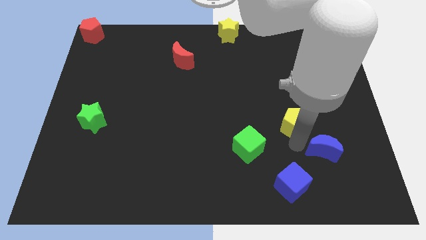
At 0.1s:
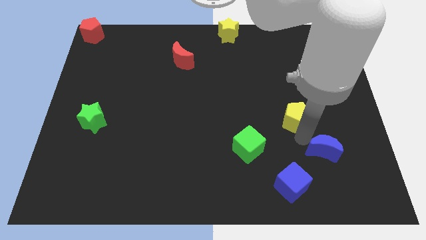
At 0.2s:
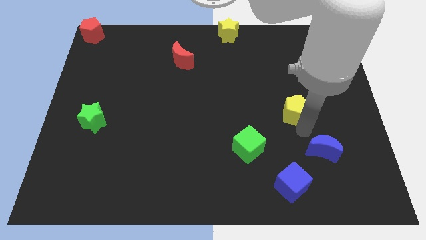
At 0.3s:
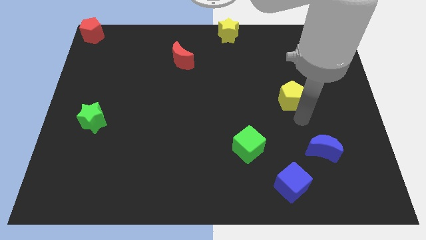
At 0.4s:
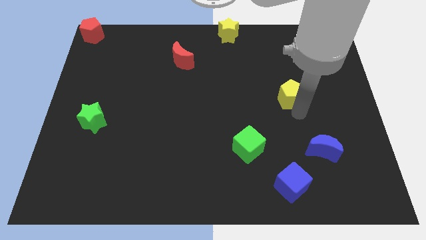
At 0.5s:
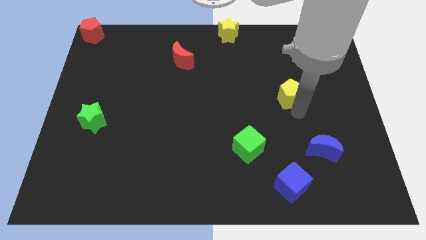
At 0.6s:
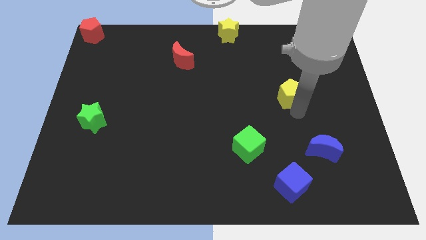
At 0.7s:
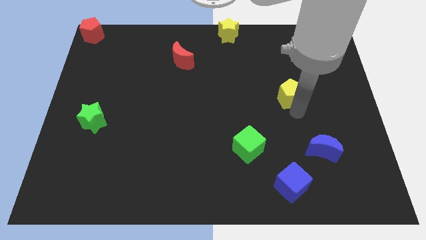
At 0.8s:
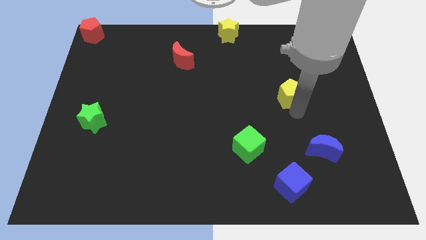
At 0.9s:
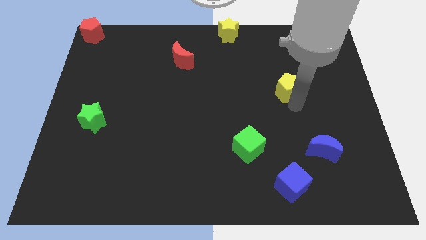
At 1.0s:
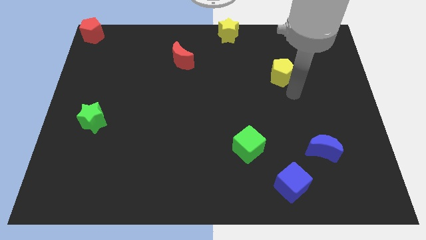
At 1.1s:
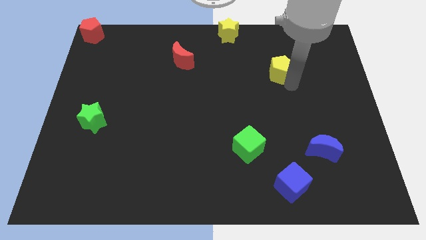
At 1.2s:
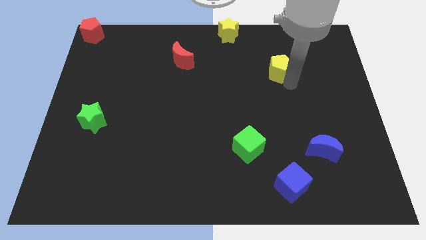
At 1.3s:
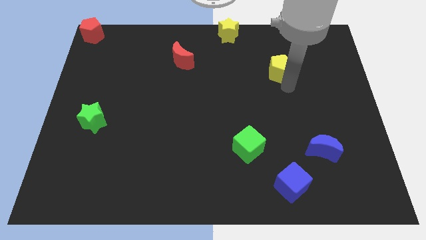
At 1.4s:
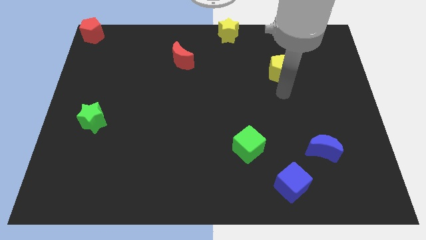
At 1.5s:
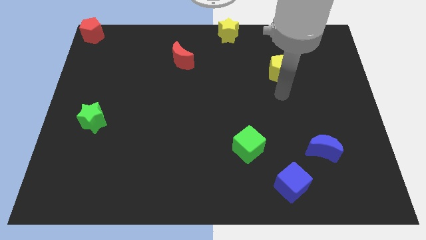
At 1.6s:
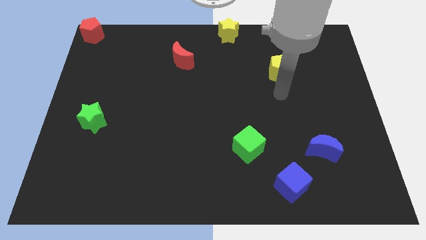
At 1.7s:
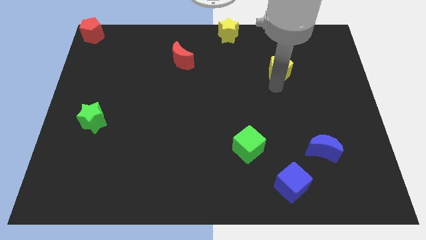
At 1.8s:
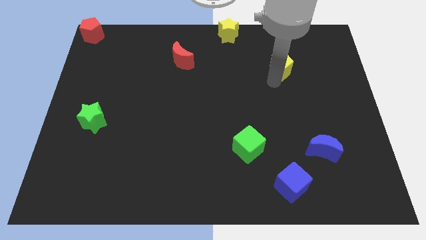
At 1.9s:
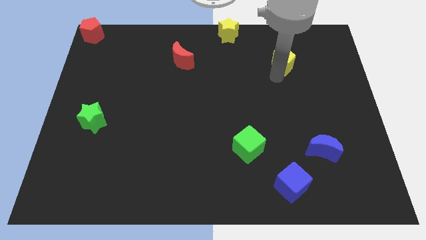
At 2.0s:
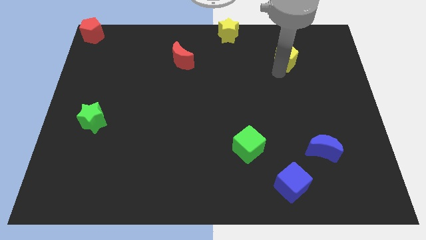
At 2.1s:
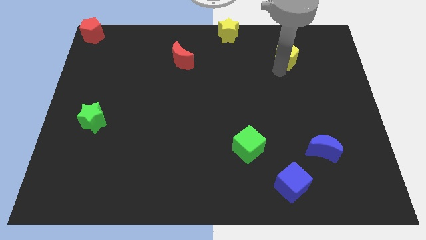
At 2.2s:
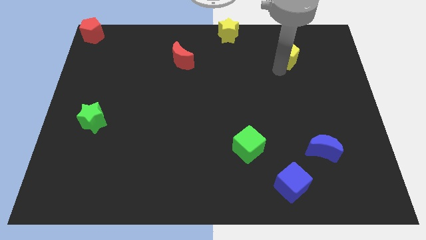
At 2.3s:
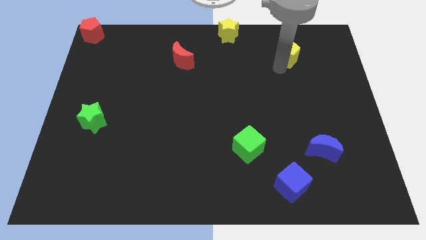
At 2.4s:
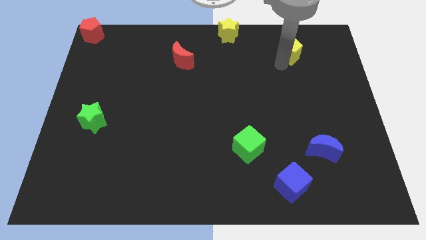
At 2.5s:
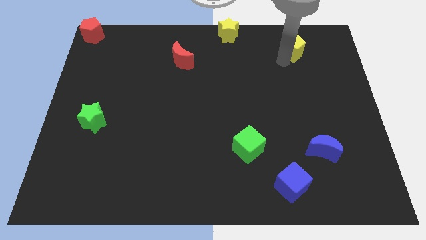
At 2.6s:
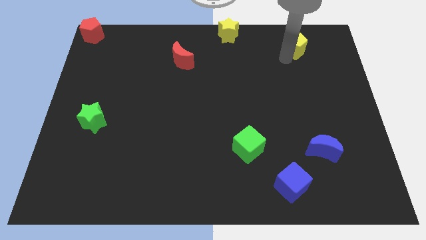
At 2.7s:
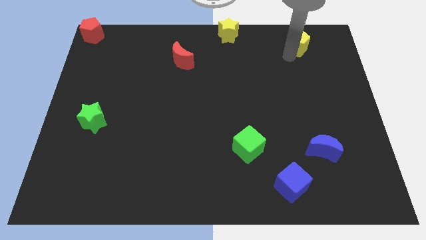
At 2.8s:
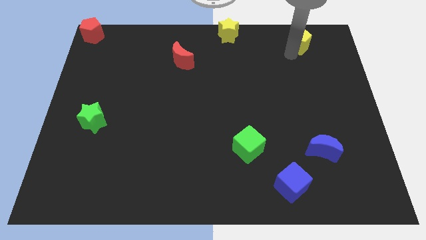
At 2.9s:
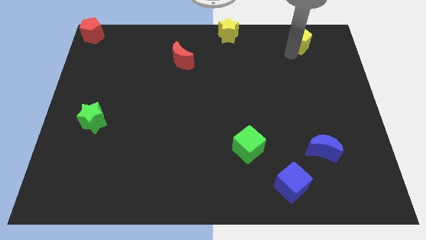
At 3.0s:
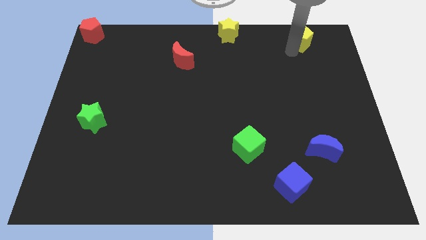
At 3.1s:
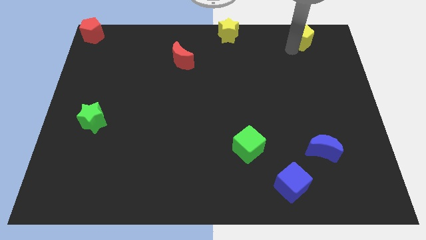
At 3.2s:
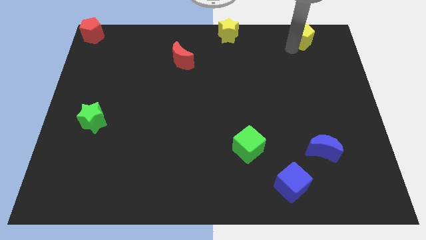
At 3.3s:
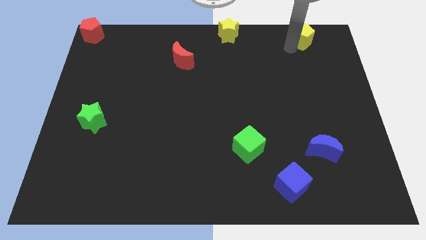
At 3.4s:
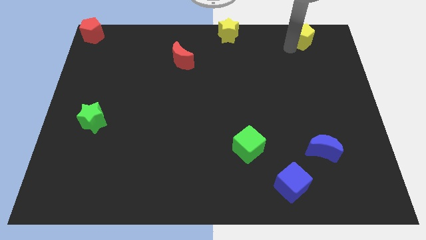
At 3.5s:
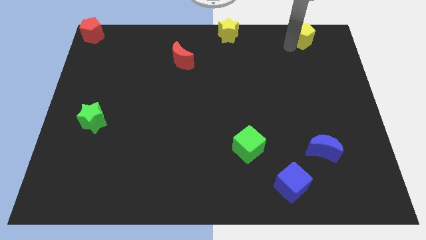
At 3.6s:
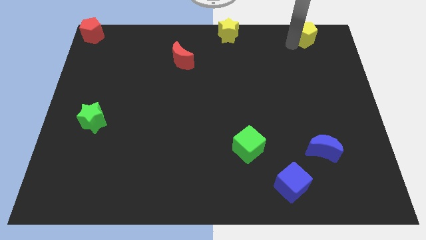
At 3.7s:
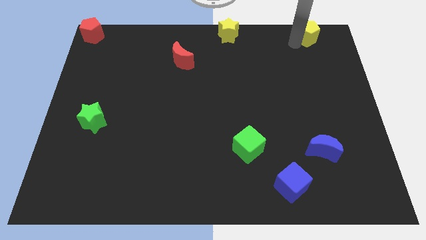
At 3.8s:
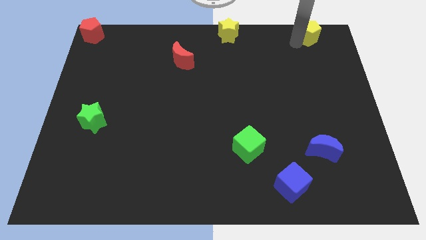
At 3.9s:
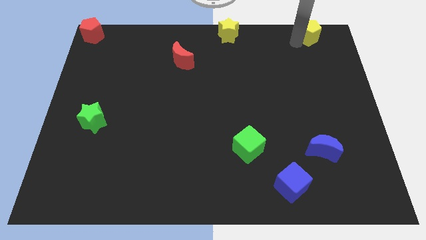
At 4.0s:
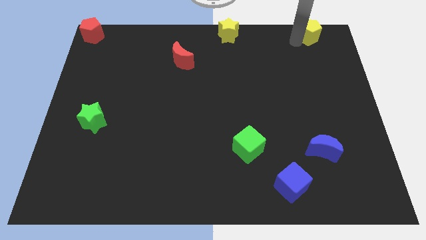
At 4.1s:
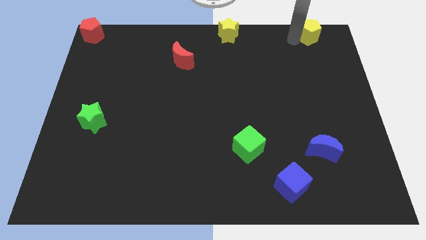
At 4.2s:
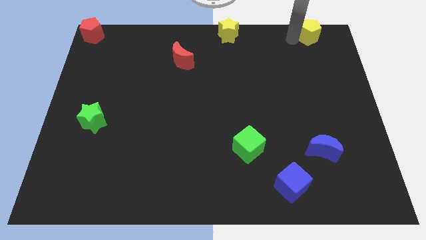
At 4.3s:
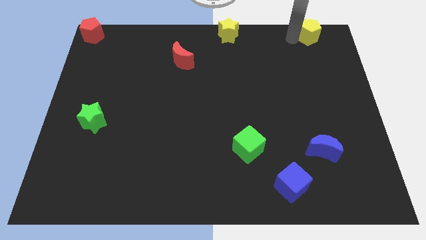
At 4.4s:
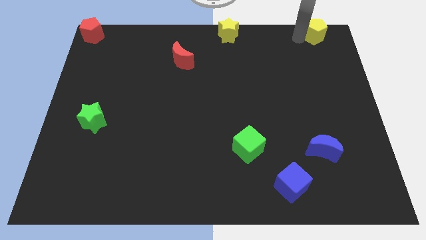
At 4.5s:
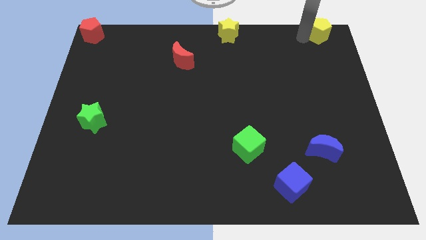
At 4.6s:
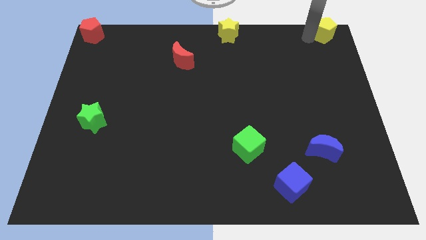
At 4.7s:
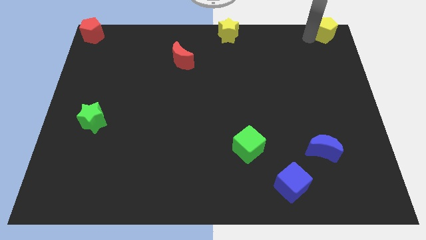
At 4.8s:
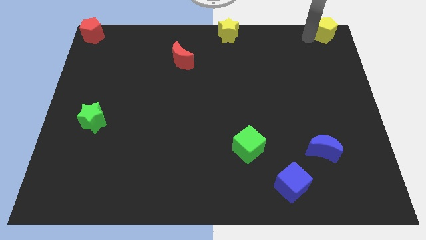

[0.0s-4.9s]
push the yellow pentagon to the top right corner of he board

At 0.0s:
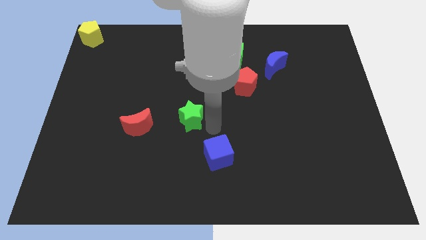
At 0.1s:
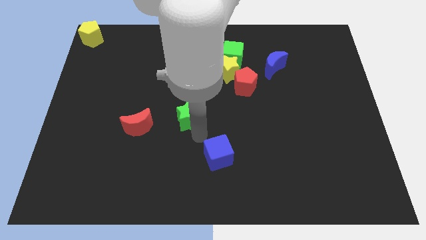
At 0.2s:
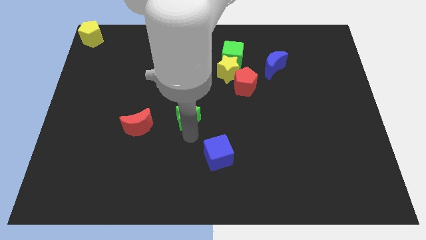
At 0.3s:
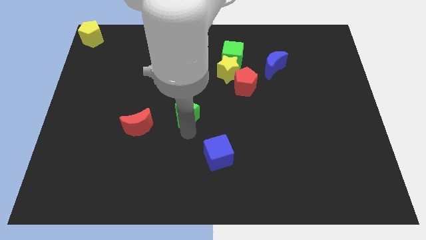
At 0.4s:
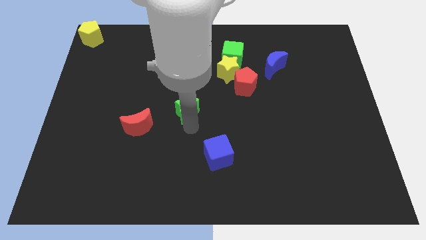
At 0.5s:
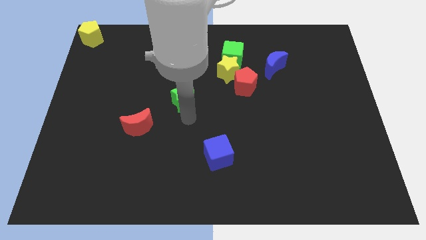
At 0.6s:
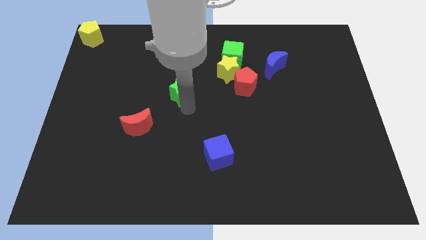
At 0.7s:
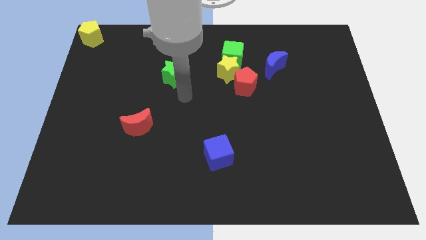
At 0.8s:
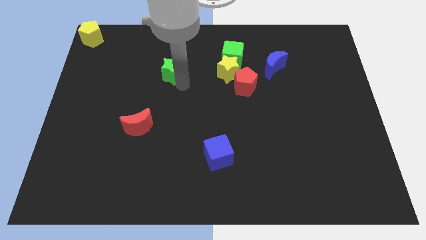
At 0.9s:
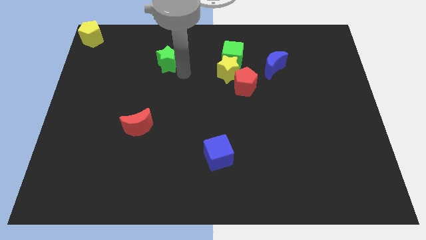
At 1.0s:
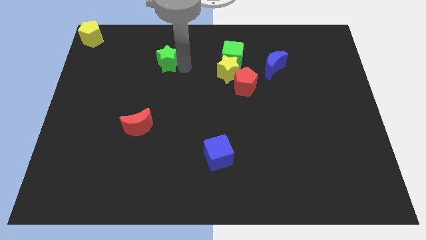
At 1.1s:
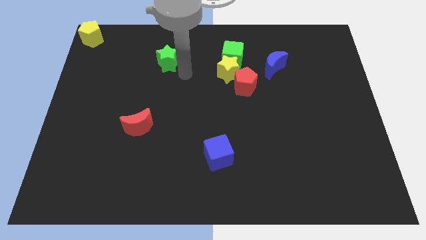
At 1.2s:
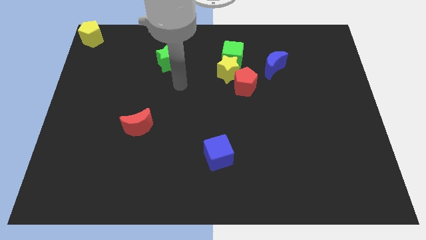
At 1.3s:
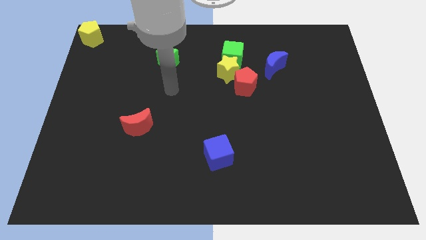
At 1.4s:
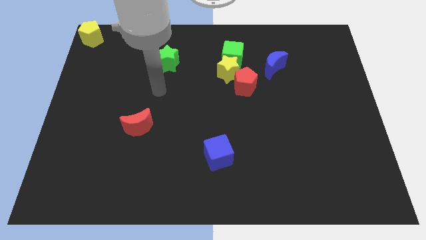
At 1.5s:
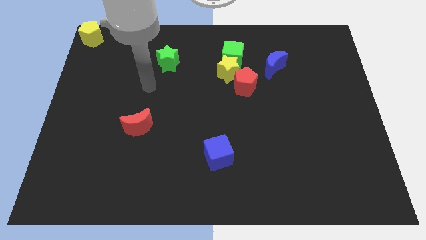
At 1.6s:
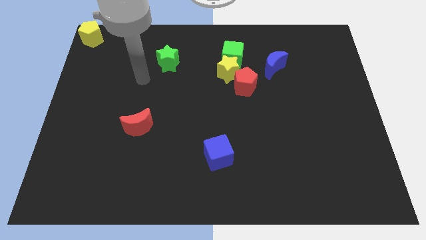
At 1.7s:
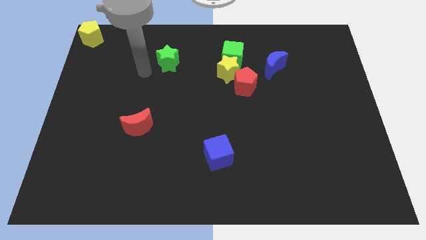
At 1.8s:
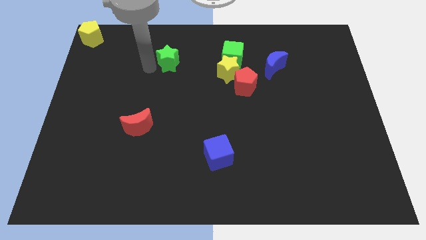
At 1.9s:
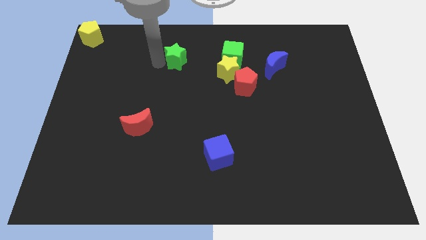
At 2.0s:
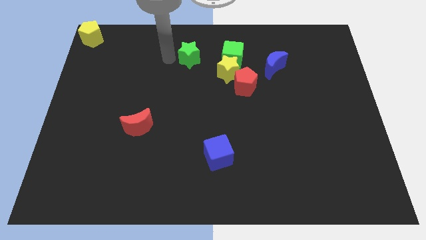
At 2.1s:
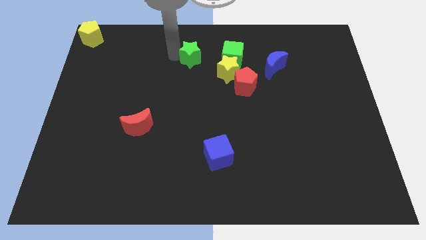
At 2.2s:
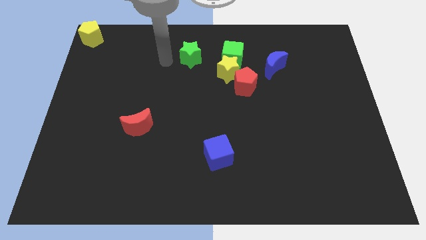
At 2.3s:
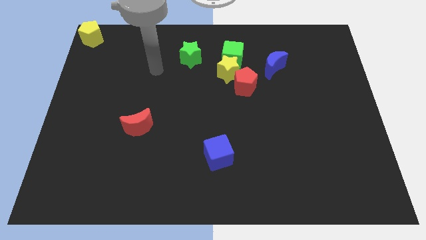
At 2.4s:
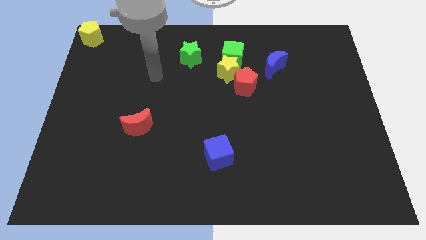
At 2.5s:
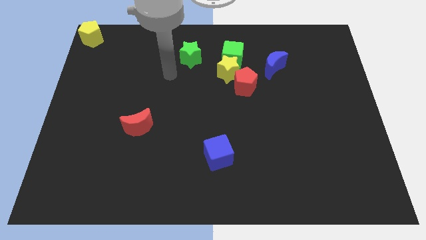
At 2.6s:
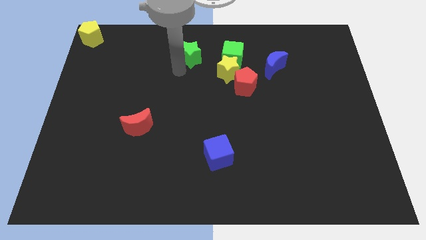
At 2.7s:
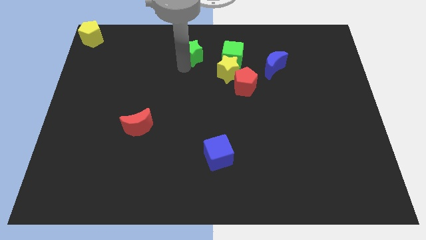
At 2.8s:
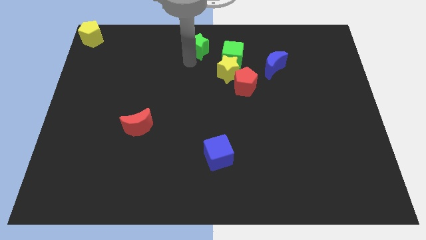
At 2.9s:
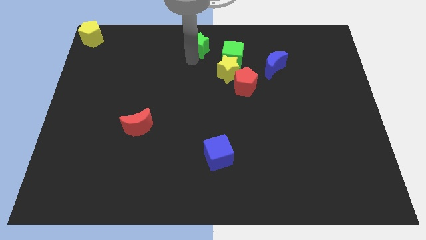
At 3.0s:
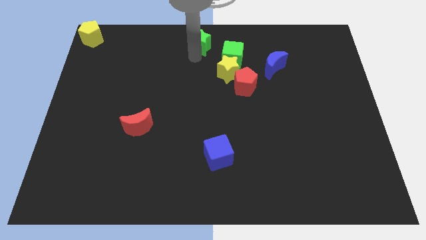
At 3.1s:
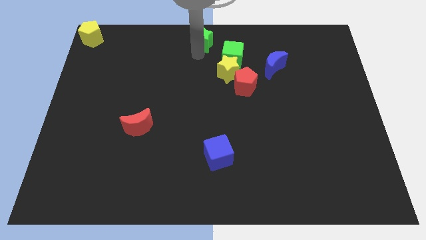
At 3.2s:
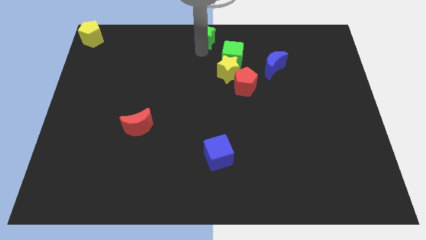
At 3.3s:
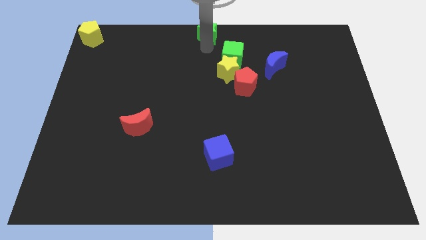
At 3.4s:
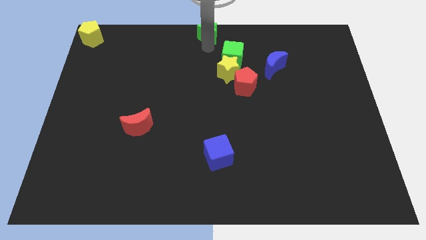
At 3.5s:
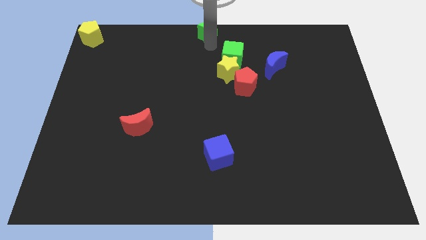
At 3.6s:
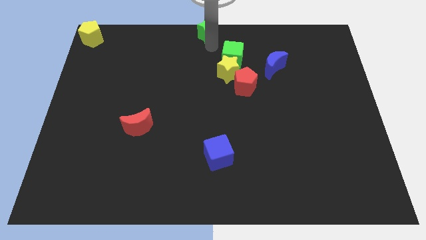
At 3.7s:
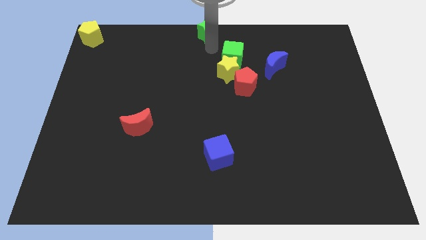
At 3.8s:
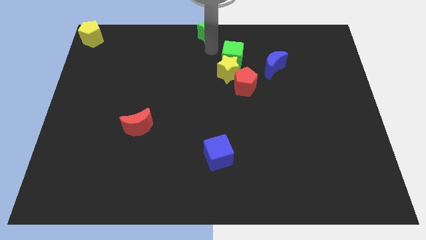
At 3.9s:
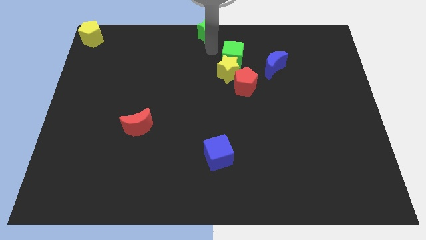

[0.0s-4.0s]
move the green star to the top center of the board
